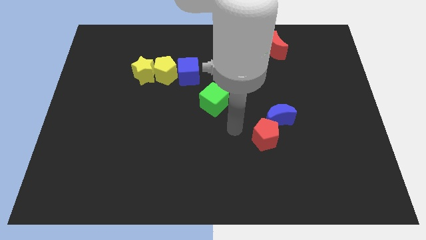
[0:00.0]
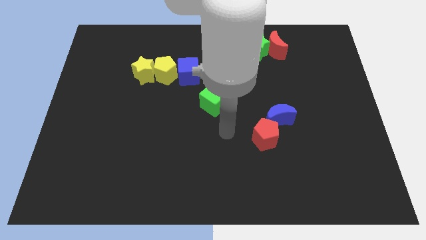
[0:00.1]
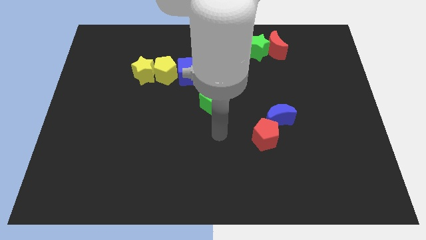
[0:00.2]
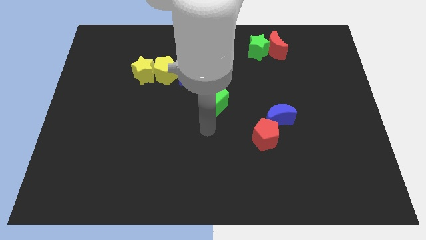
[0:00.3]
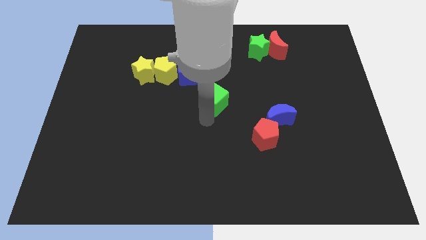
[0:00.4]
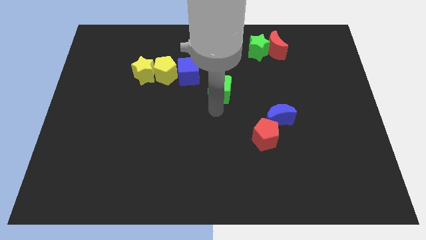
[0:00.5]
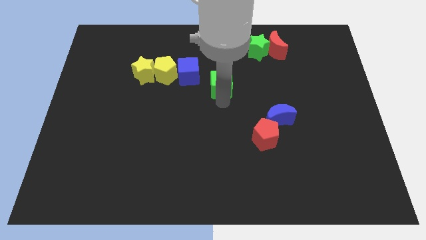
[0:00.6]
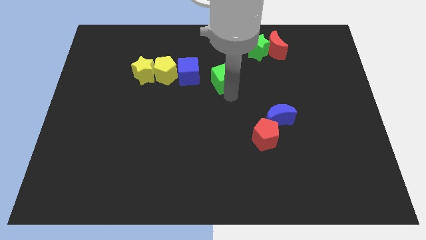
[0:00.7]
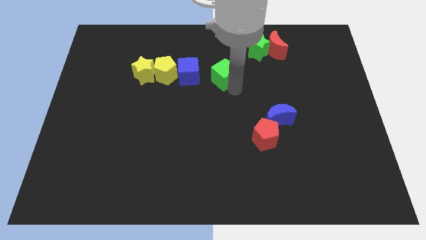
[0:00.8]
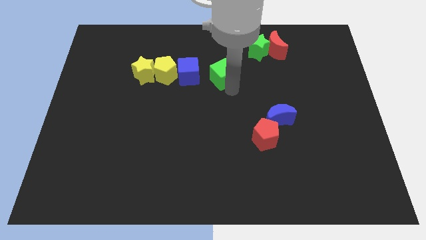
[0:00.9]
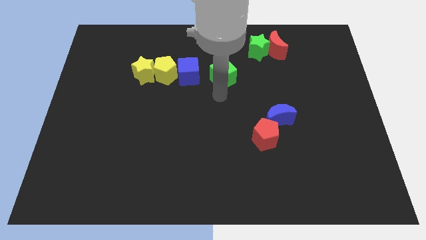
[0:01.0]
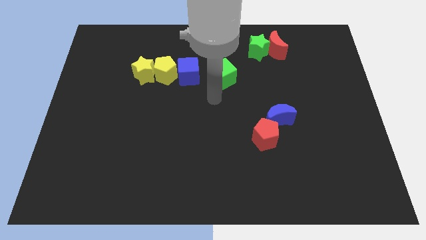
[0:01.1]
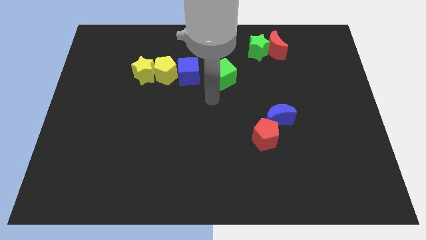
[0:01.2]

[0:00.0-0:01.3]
place the green cube to the right of the blue cube

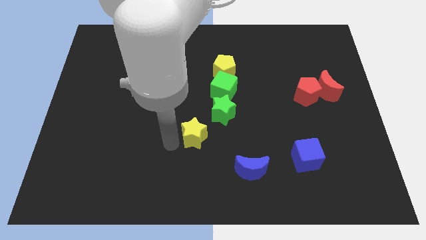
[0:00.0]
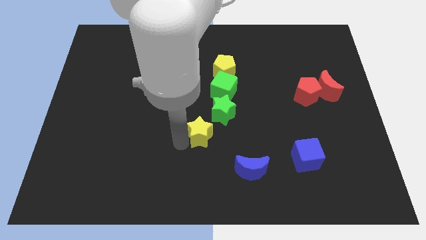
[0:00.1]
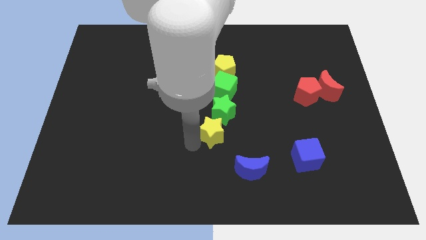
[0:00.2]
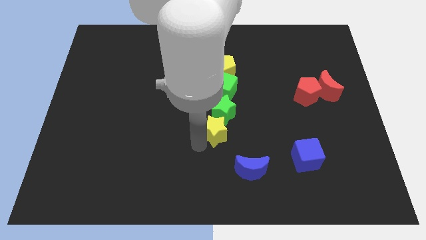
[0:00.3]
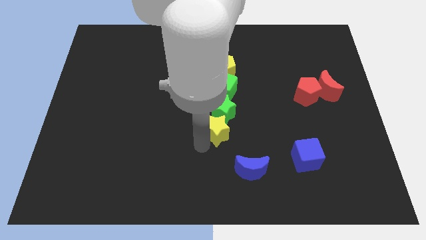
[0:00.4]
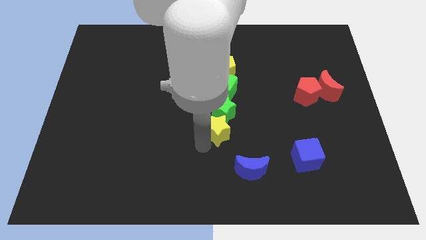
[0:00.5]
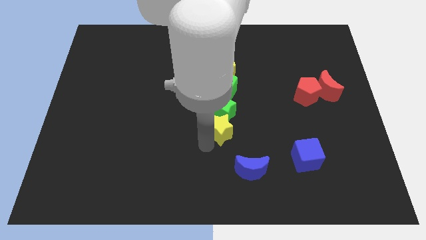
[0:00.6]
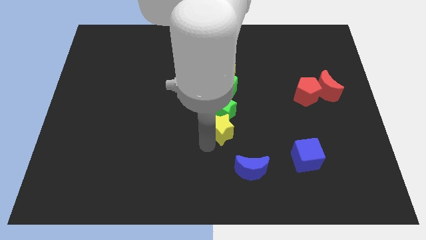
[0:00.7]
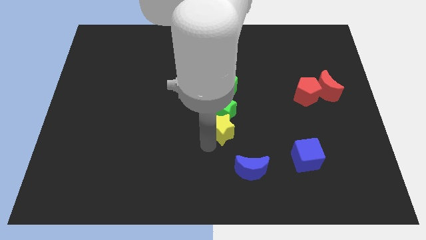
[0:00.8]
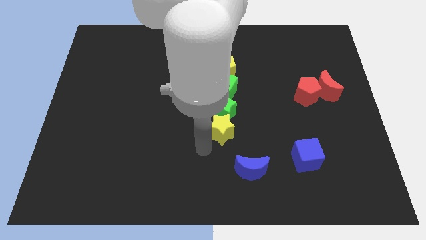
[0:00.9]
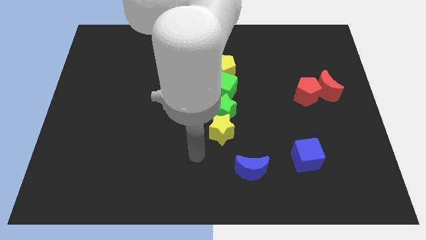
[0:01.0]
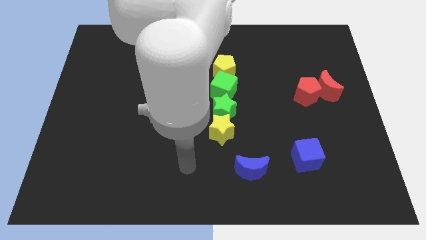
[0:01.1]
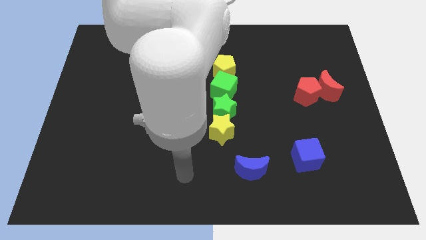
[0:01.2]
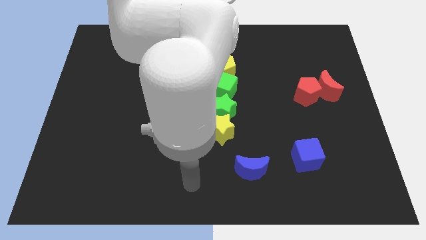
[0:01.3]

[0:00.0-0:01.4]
place the yellow star bottom to the green star

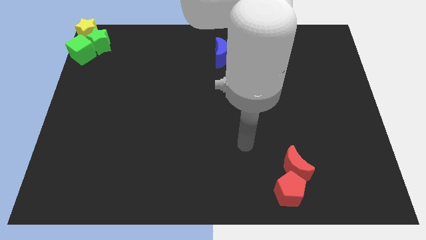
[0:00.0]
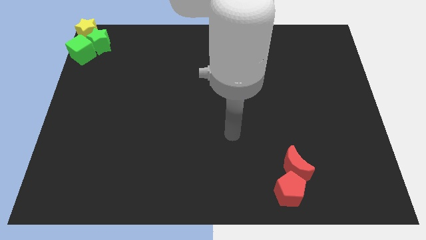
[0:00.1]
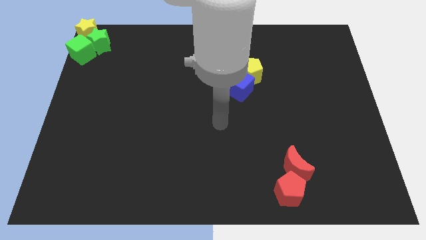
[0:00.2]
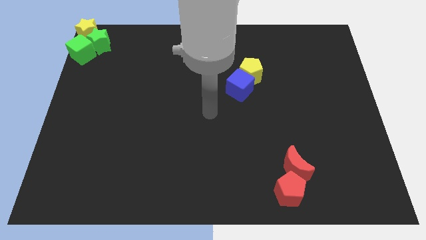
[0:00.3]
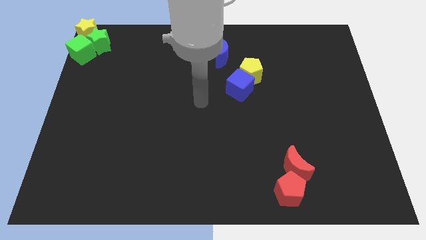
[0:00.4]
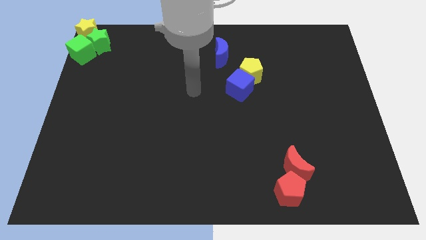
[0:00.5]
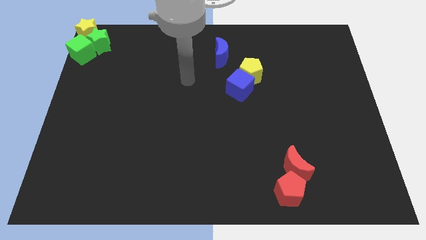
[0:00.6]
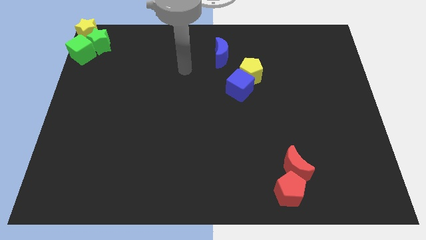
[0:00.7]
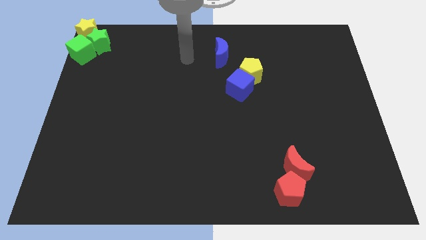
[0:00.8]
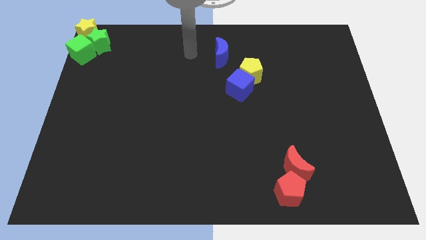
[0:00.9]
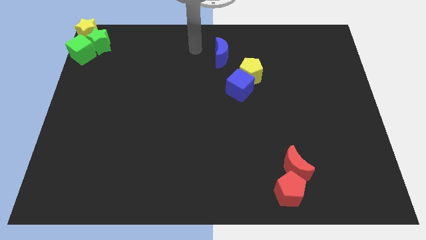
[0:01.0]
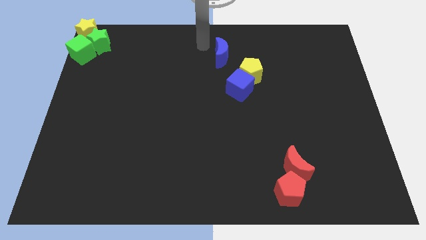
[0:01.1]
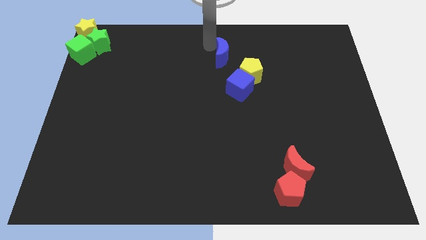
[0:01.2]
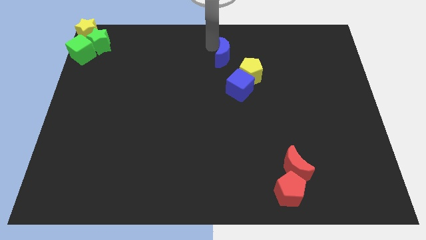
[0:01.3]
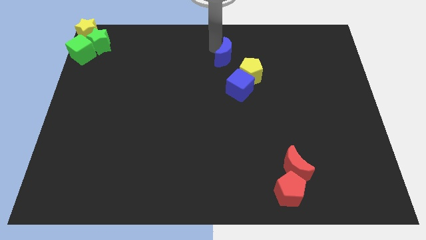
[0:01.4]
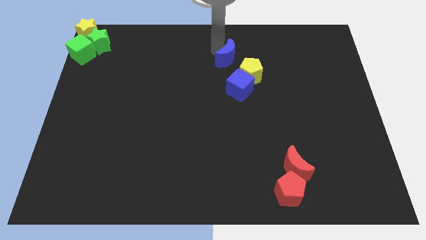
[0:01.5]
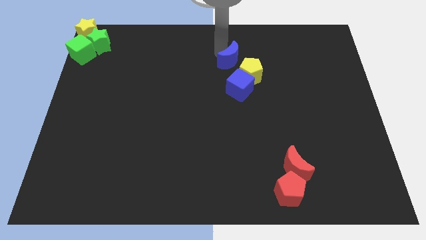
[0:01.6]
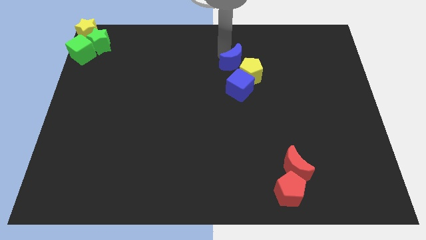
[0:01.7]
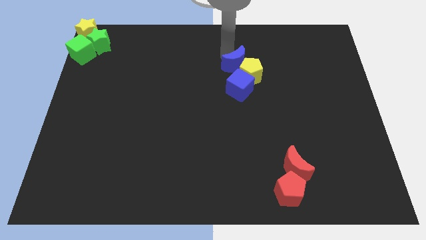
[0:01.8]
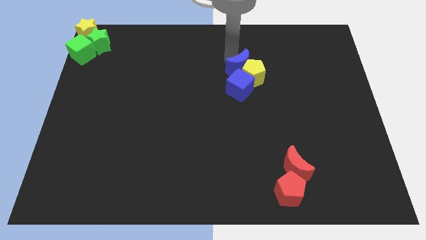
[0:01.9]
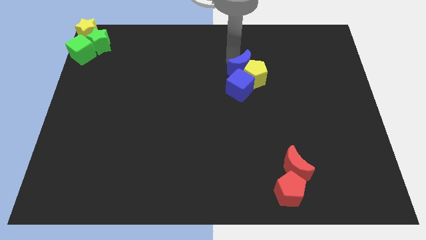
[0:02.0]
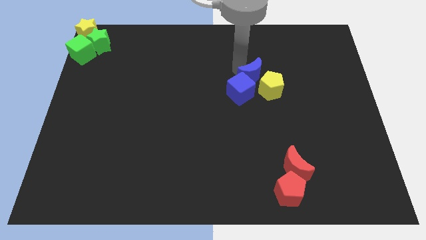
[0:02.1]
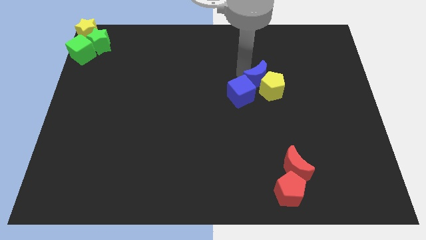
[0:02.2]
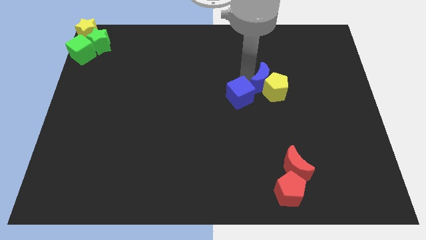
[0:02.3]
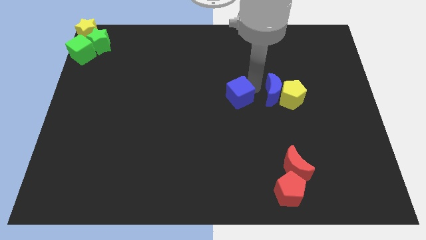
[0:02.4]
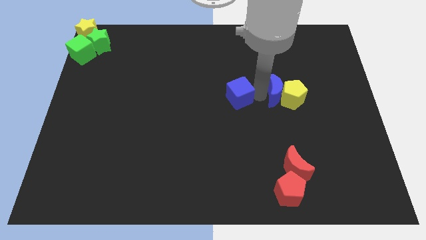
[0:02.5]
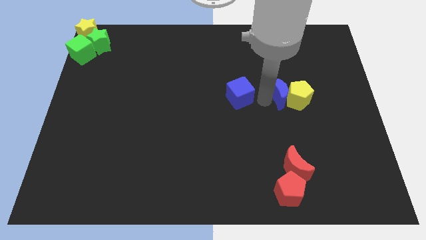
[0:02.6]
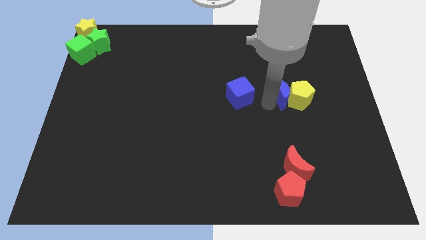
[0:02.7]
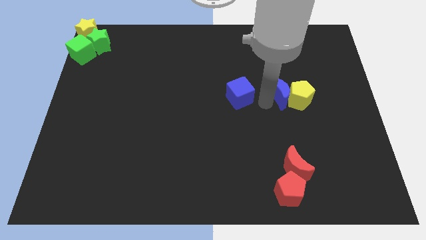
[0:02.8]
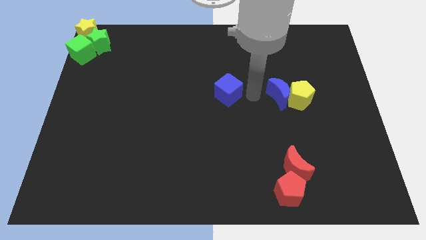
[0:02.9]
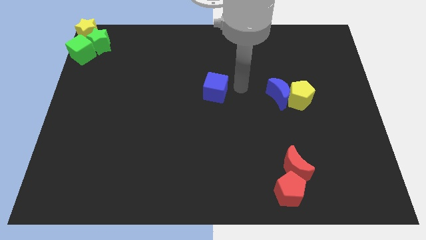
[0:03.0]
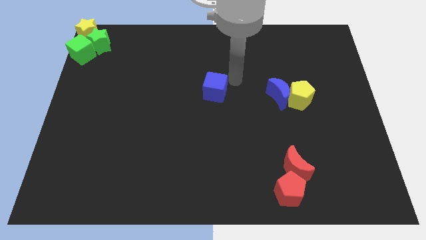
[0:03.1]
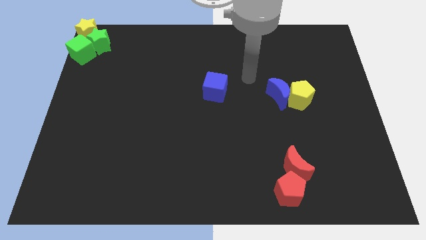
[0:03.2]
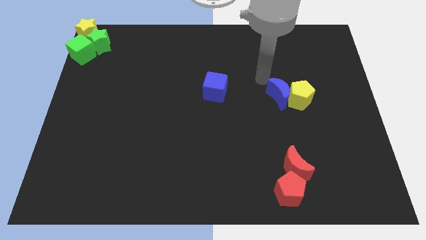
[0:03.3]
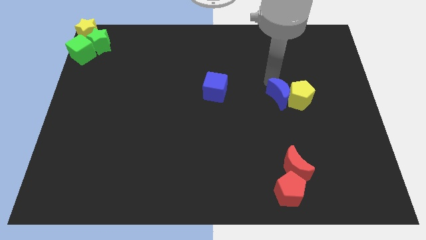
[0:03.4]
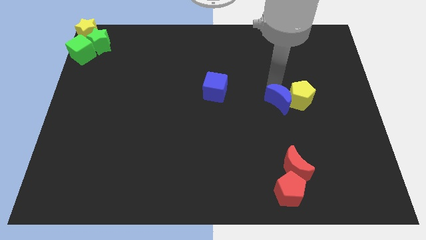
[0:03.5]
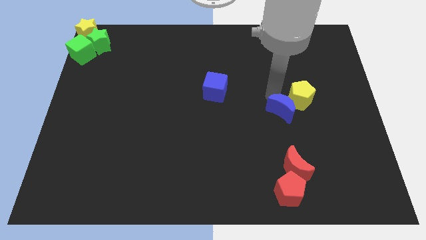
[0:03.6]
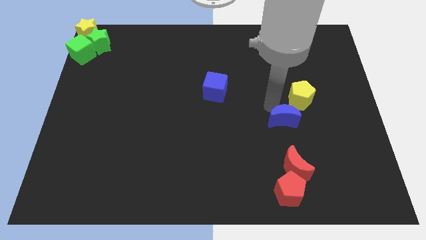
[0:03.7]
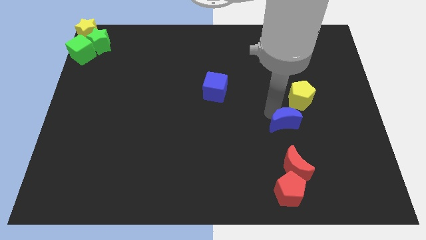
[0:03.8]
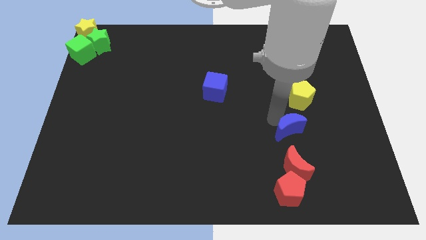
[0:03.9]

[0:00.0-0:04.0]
push the blue moon into the blue cube and yellow pentagon

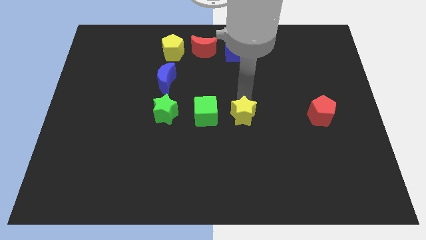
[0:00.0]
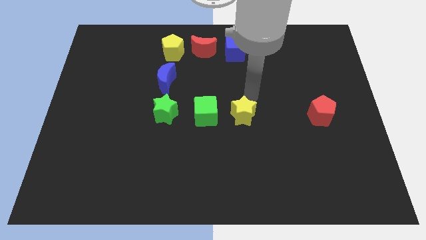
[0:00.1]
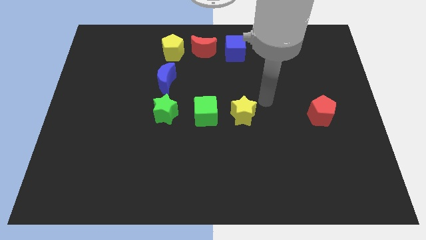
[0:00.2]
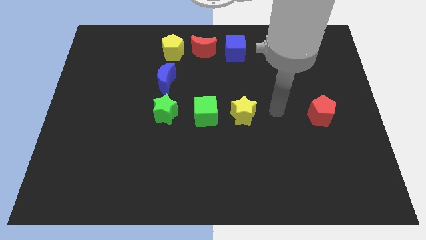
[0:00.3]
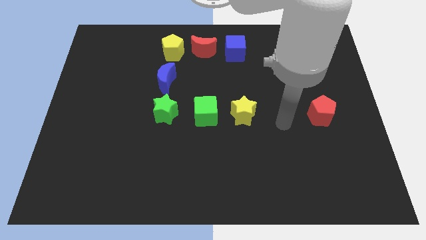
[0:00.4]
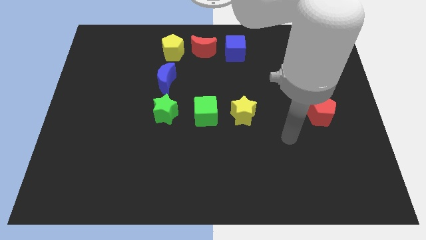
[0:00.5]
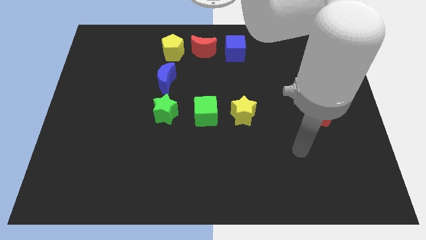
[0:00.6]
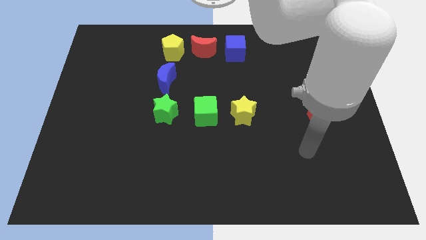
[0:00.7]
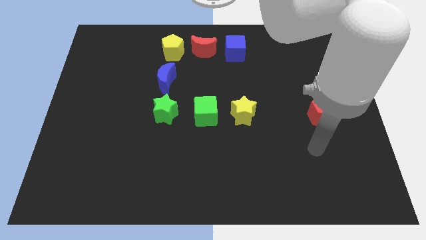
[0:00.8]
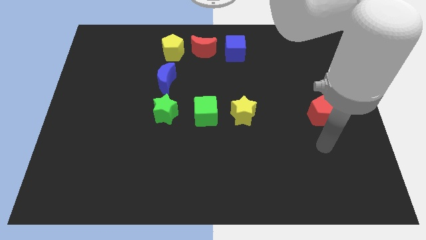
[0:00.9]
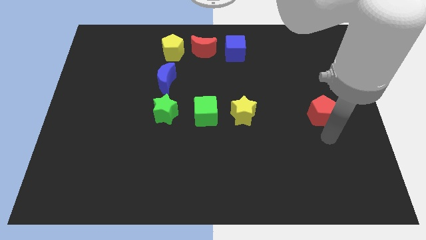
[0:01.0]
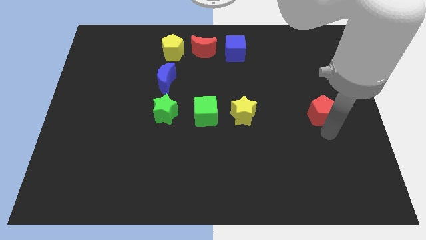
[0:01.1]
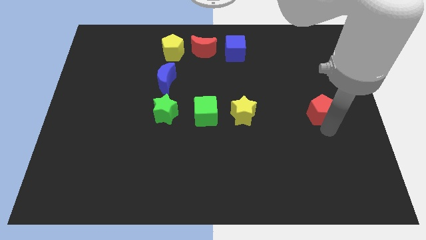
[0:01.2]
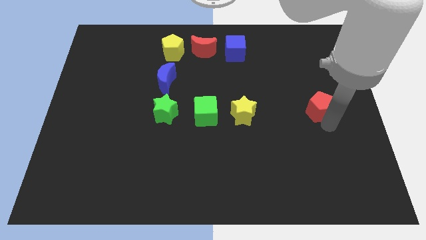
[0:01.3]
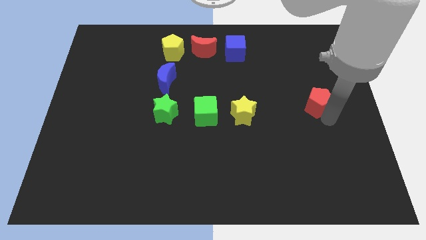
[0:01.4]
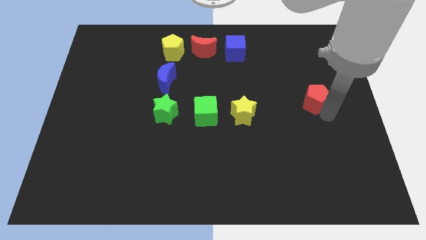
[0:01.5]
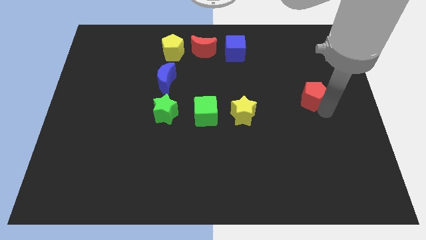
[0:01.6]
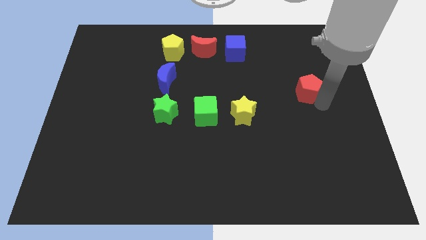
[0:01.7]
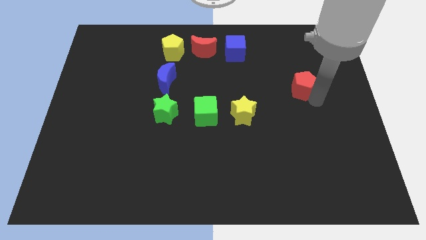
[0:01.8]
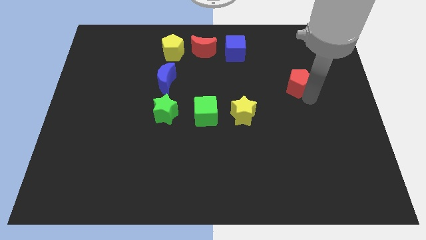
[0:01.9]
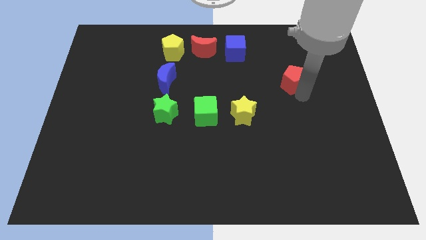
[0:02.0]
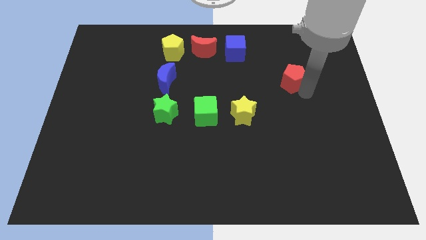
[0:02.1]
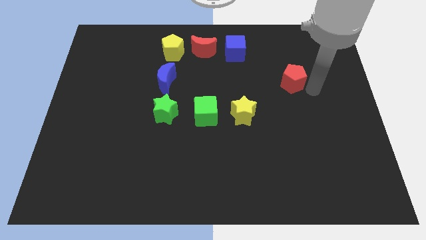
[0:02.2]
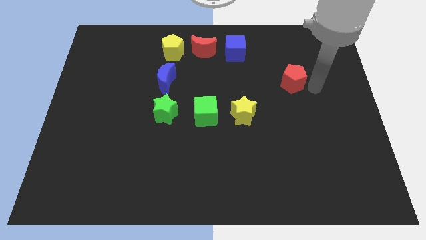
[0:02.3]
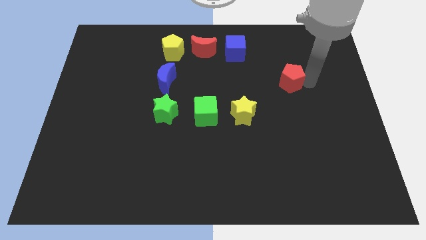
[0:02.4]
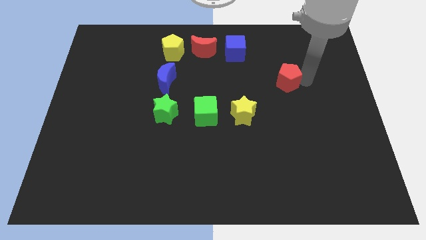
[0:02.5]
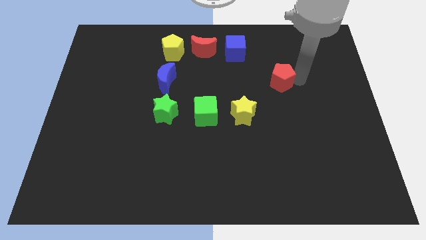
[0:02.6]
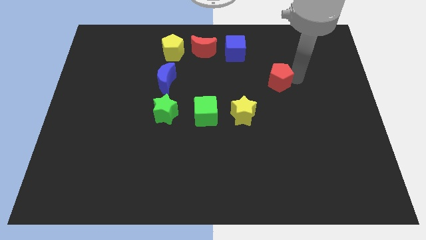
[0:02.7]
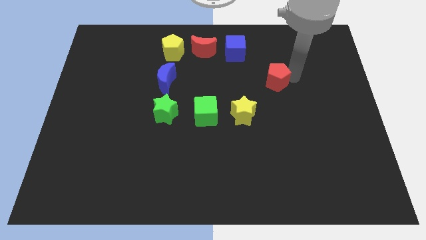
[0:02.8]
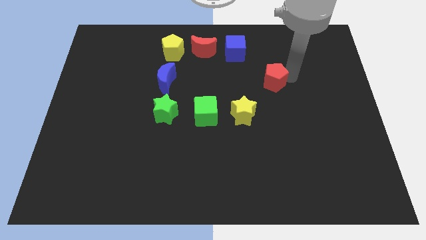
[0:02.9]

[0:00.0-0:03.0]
push the red pentagon to the top right of the yellow star
